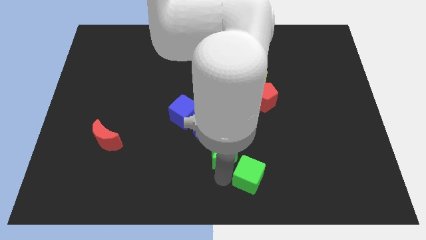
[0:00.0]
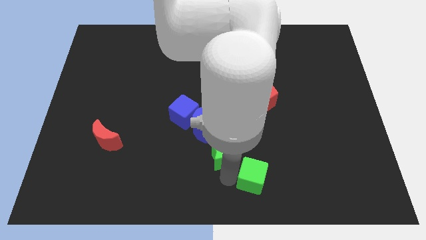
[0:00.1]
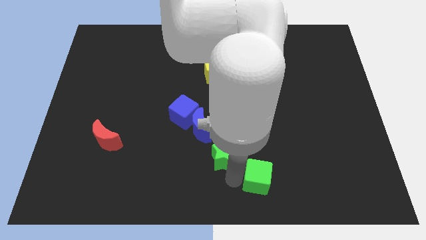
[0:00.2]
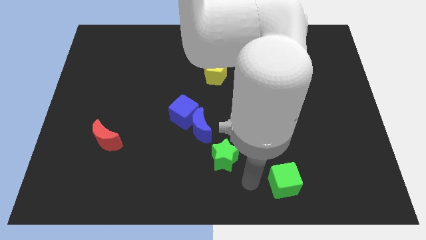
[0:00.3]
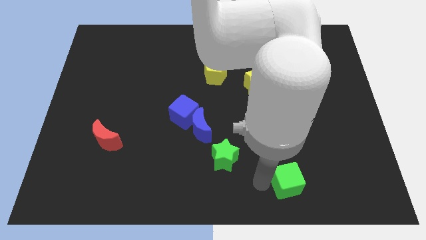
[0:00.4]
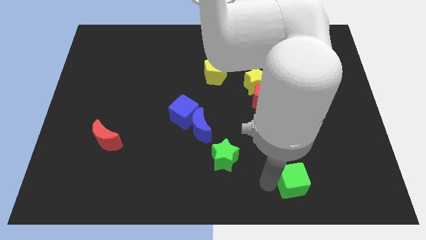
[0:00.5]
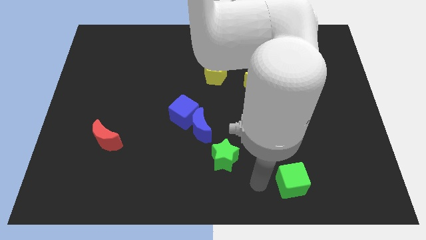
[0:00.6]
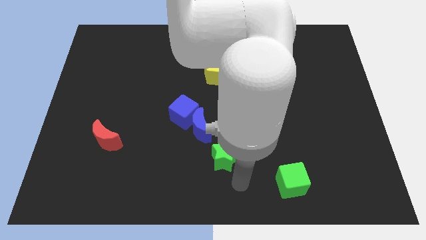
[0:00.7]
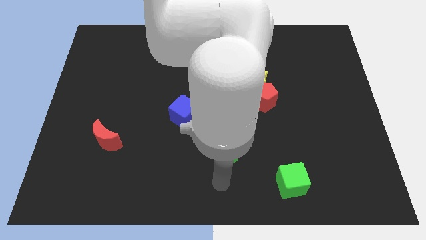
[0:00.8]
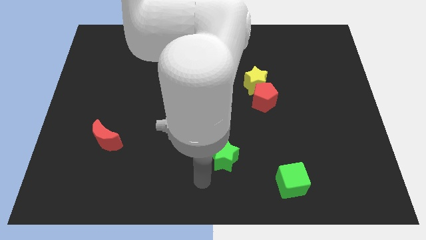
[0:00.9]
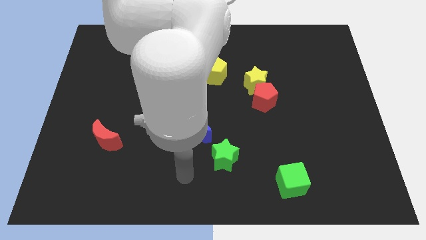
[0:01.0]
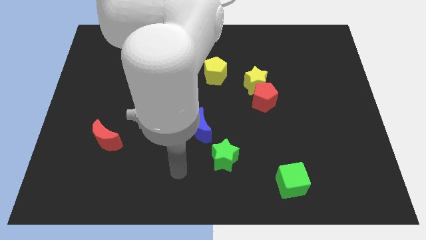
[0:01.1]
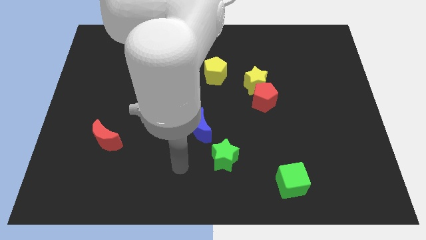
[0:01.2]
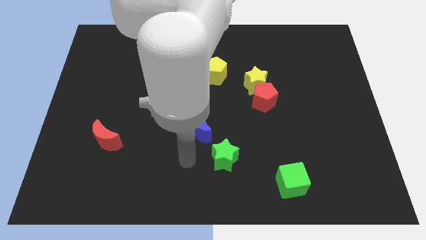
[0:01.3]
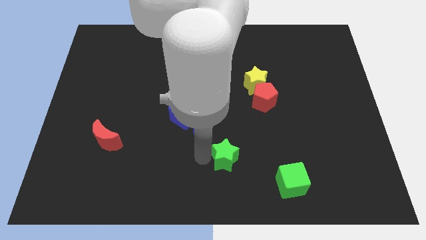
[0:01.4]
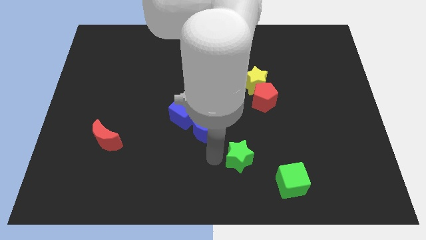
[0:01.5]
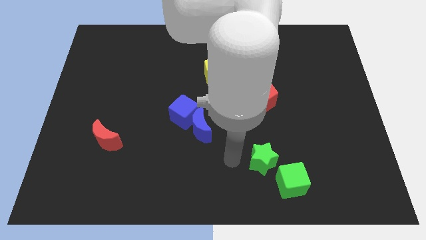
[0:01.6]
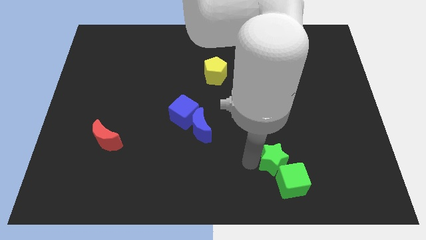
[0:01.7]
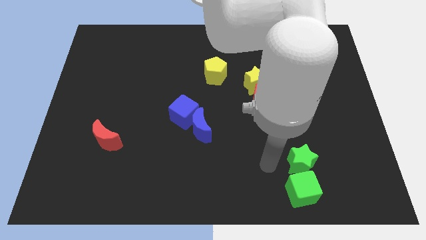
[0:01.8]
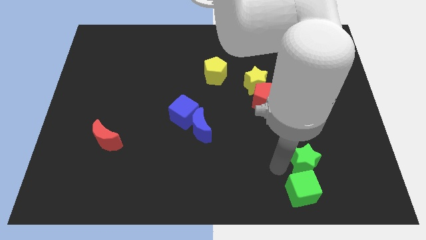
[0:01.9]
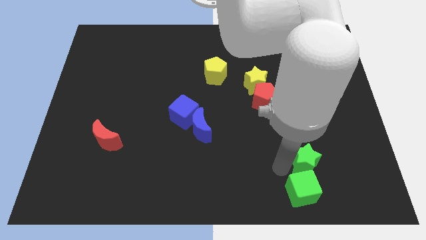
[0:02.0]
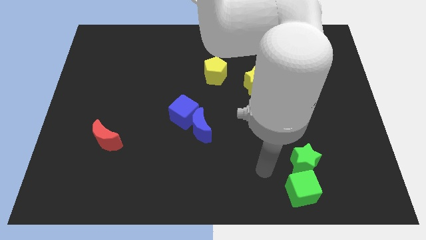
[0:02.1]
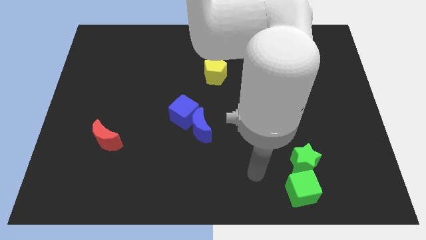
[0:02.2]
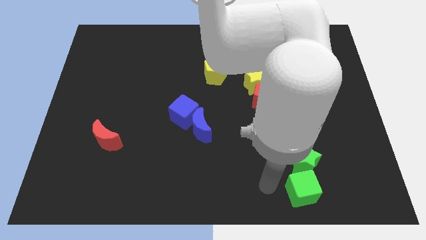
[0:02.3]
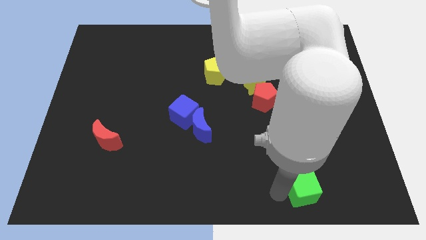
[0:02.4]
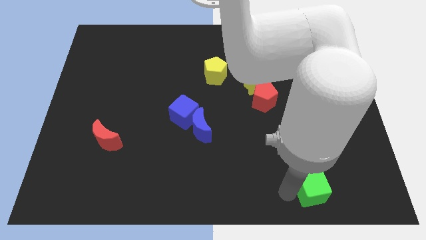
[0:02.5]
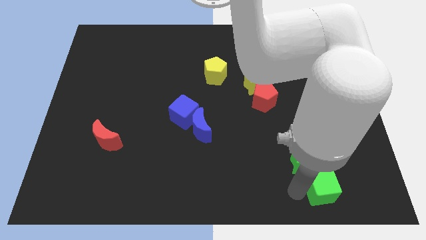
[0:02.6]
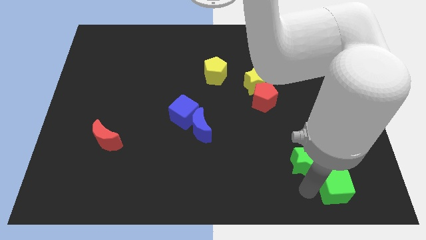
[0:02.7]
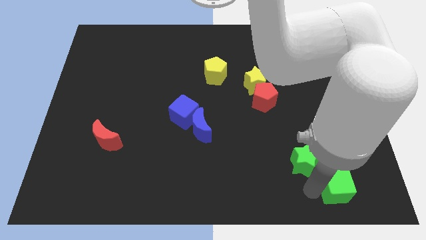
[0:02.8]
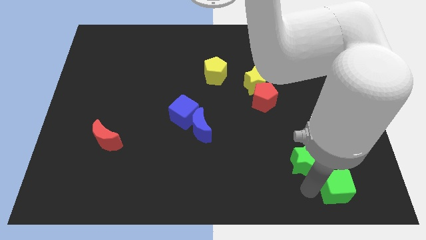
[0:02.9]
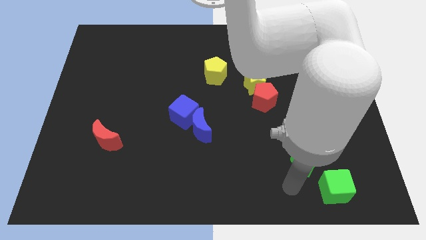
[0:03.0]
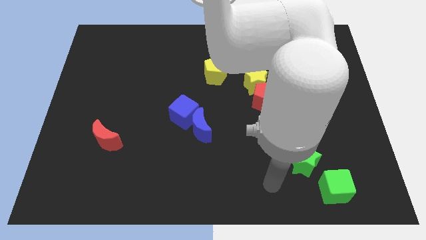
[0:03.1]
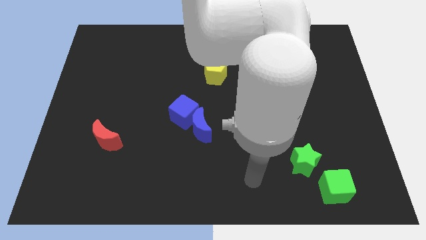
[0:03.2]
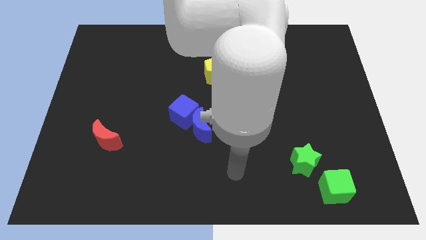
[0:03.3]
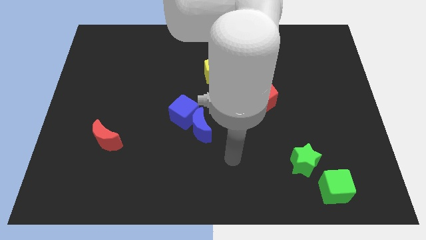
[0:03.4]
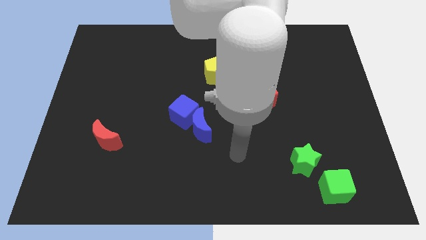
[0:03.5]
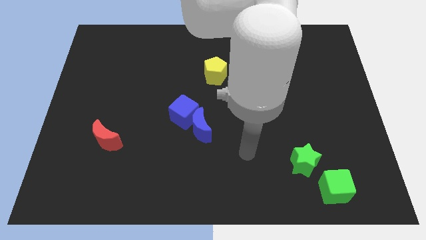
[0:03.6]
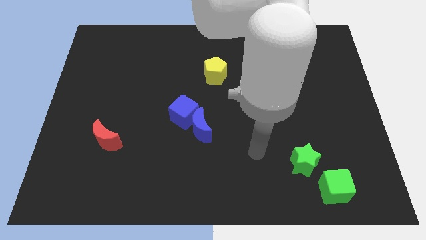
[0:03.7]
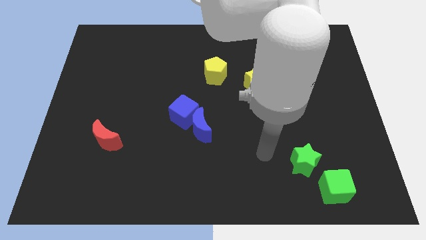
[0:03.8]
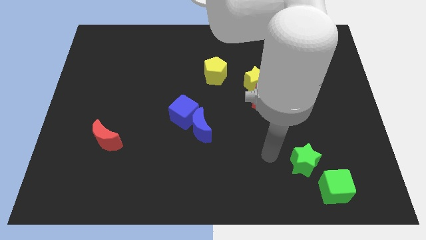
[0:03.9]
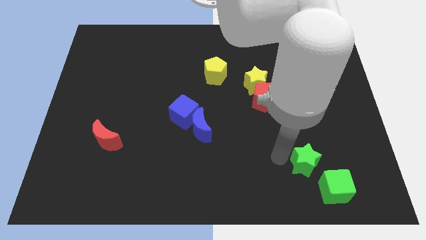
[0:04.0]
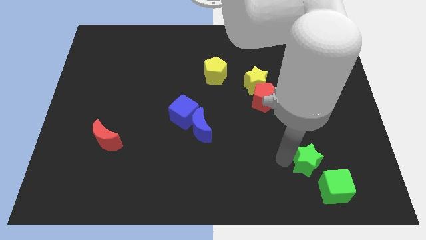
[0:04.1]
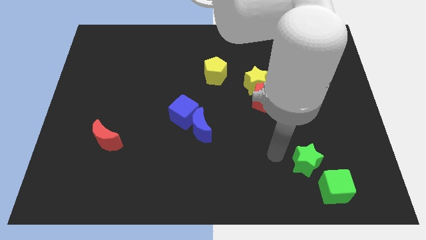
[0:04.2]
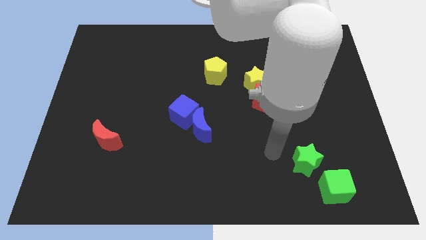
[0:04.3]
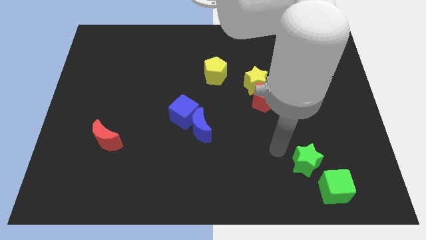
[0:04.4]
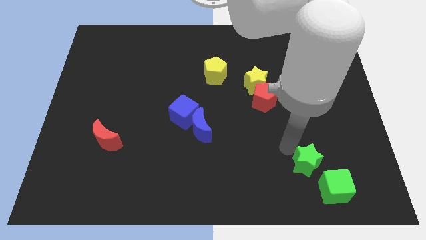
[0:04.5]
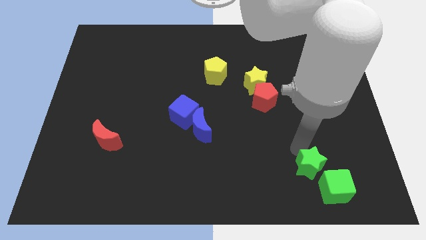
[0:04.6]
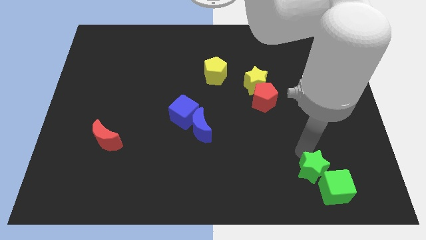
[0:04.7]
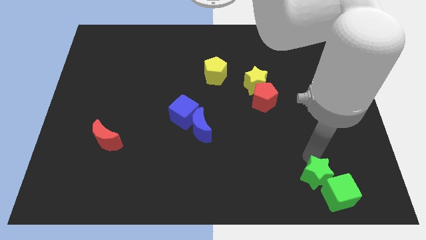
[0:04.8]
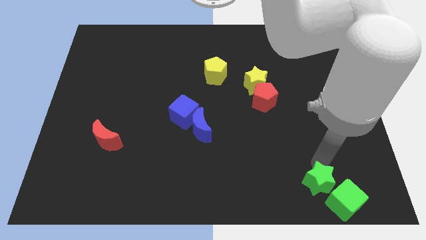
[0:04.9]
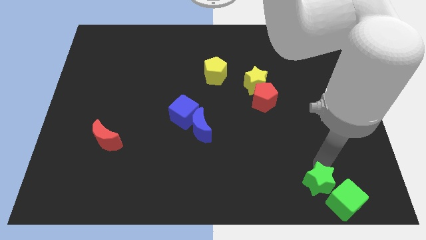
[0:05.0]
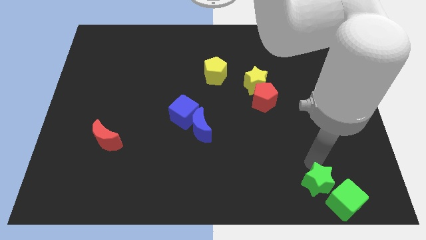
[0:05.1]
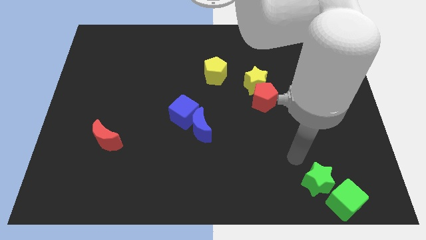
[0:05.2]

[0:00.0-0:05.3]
move the green blocks to the bottom side of the table

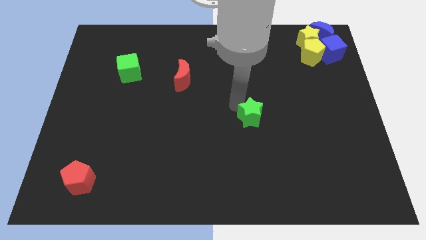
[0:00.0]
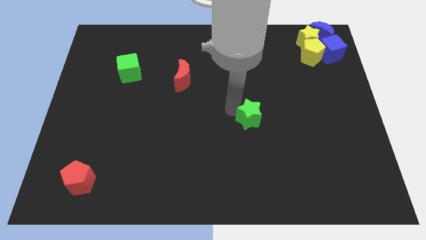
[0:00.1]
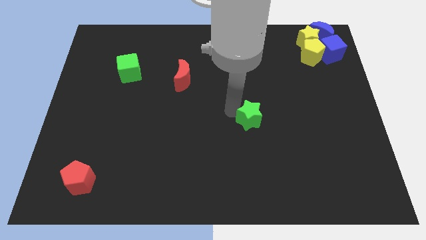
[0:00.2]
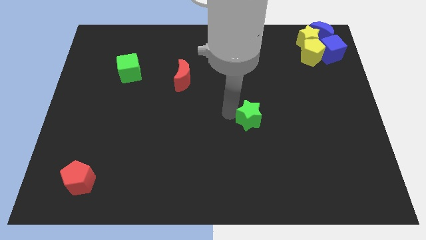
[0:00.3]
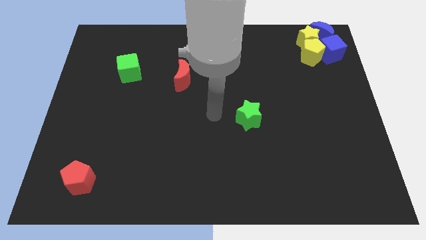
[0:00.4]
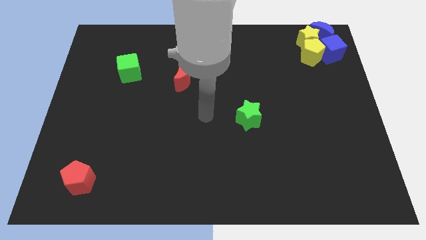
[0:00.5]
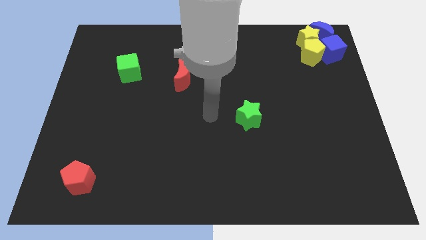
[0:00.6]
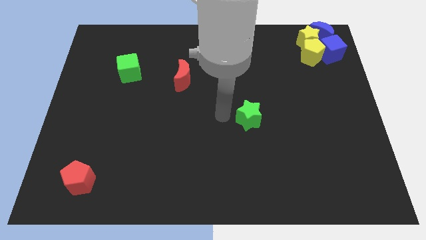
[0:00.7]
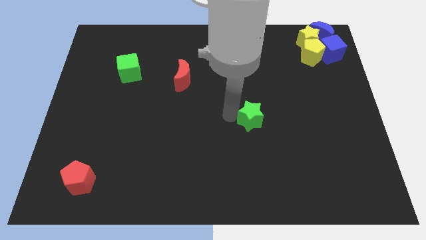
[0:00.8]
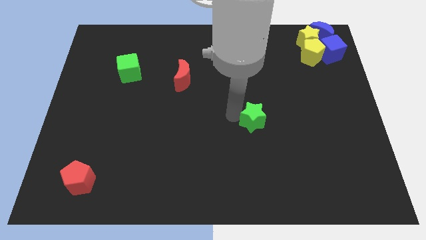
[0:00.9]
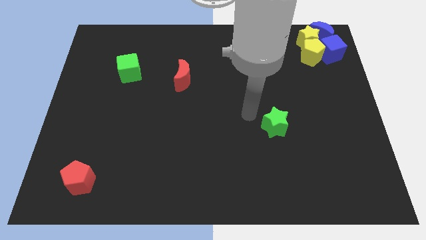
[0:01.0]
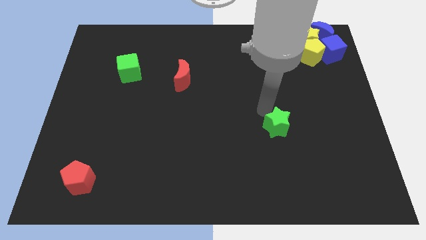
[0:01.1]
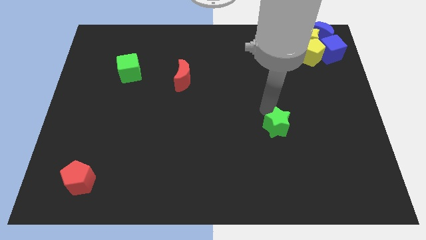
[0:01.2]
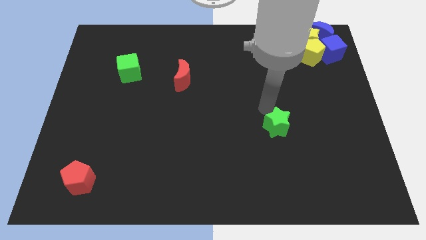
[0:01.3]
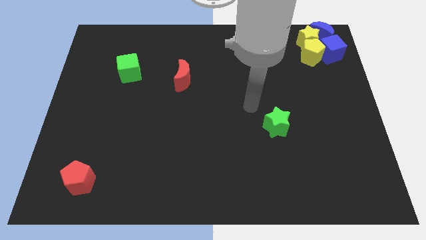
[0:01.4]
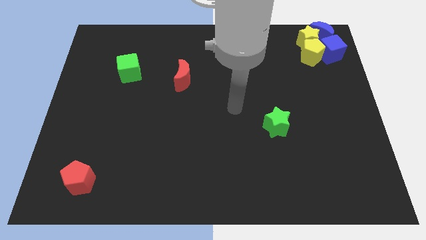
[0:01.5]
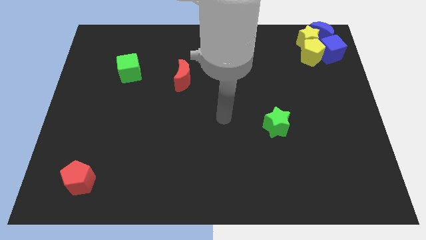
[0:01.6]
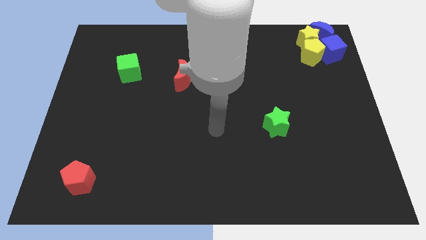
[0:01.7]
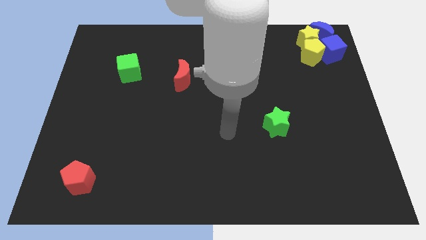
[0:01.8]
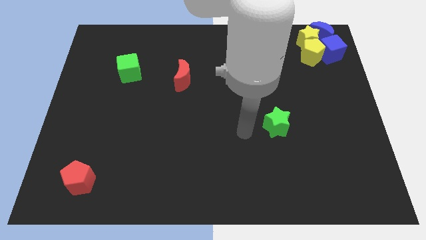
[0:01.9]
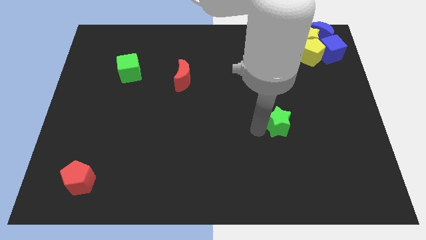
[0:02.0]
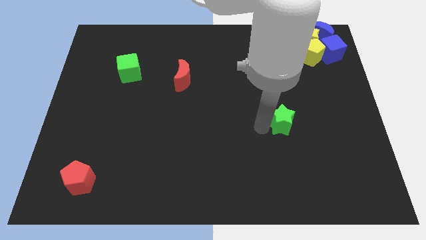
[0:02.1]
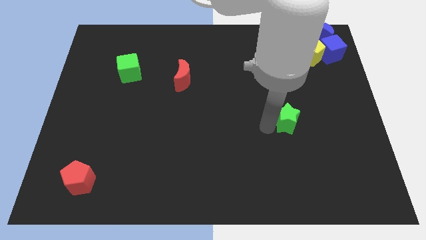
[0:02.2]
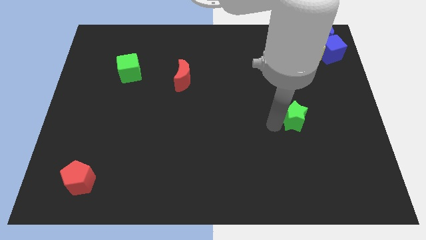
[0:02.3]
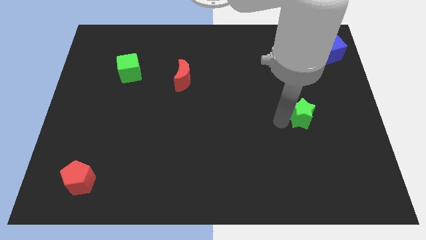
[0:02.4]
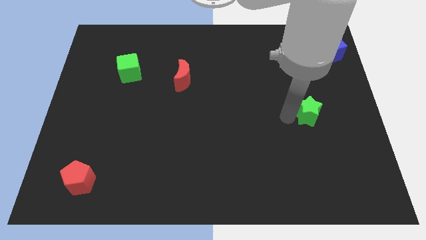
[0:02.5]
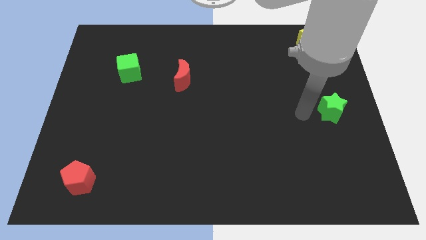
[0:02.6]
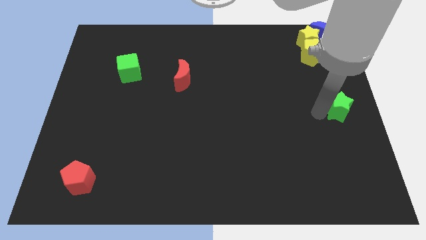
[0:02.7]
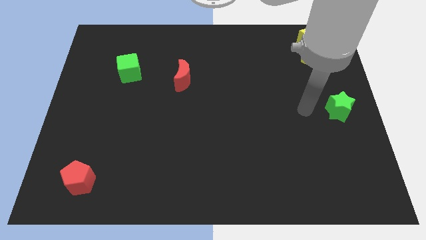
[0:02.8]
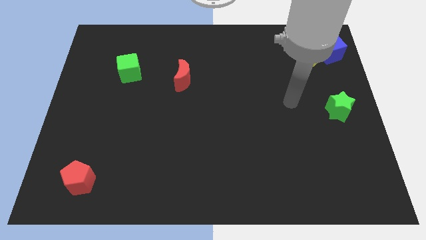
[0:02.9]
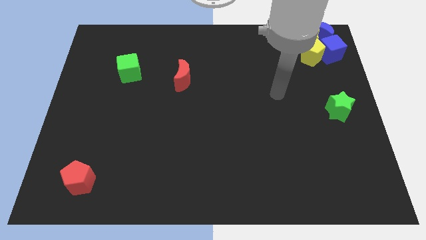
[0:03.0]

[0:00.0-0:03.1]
place the green star to the middle center of the board

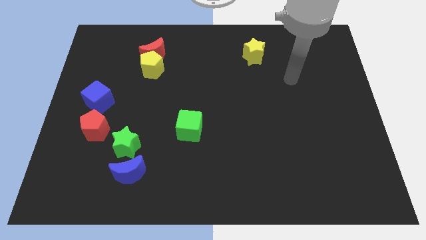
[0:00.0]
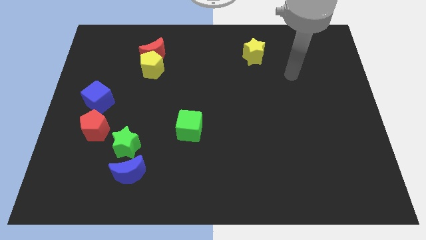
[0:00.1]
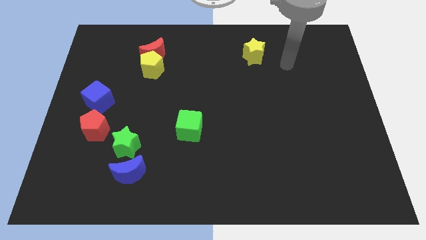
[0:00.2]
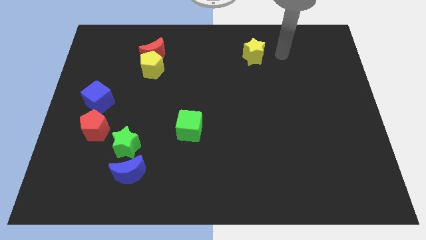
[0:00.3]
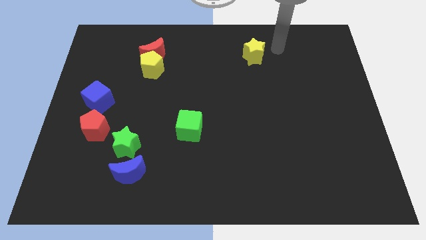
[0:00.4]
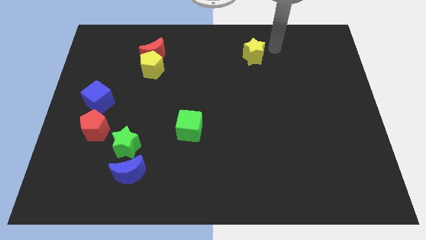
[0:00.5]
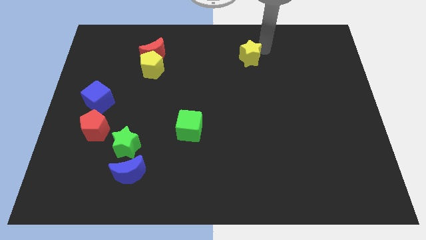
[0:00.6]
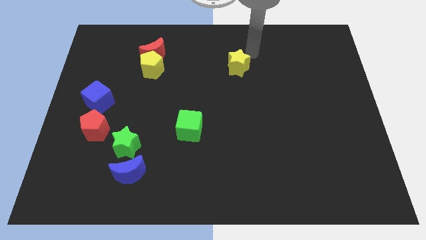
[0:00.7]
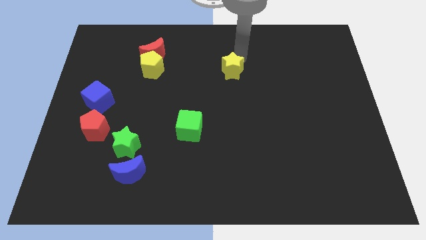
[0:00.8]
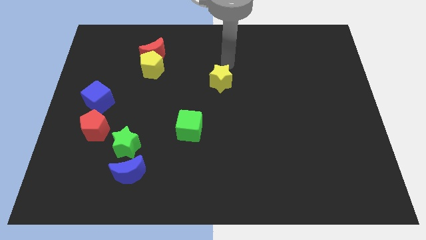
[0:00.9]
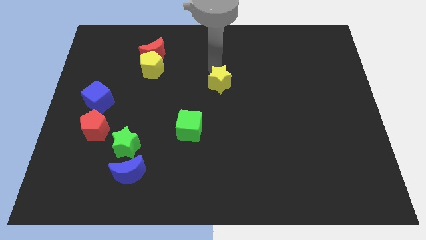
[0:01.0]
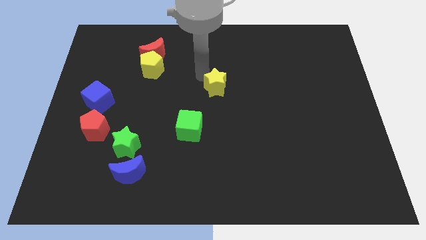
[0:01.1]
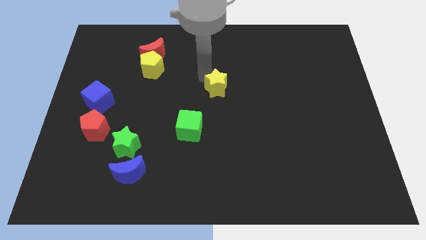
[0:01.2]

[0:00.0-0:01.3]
place a yellow star to the center of the board
